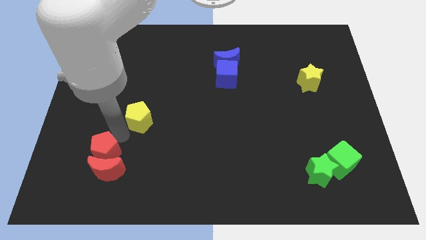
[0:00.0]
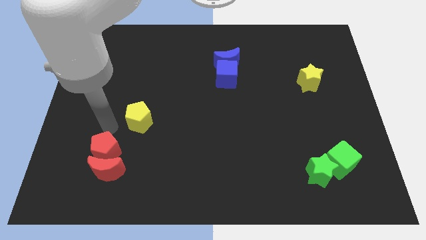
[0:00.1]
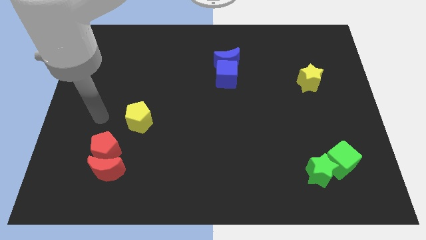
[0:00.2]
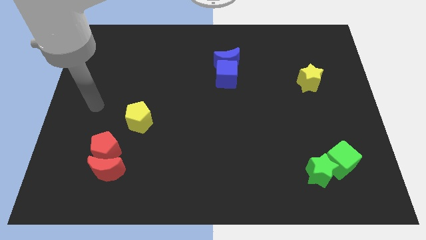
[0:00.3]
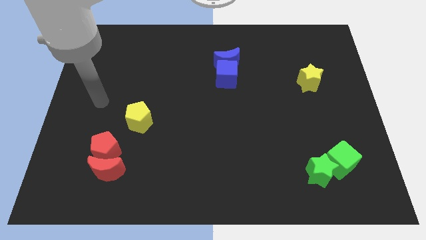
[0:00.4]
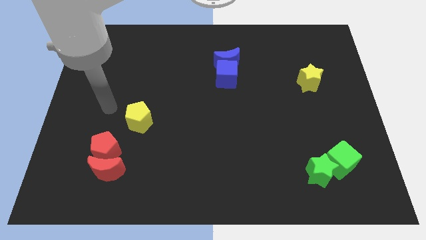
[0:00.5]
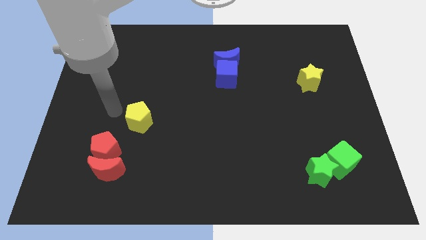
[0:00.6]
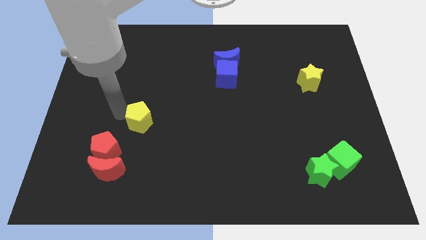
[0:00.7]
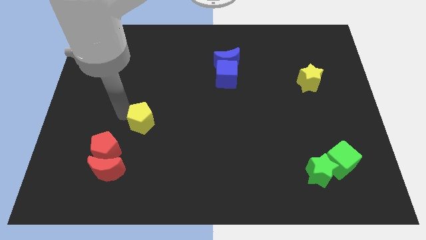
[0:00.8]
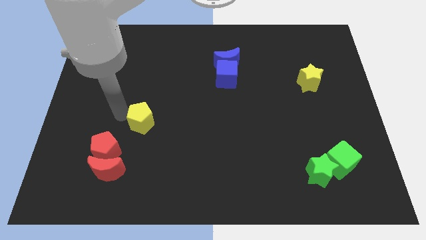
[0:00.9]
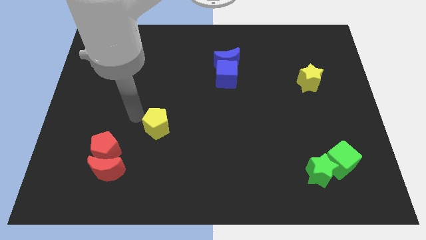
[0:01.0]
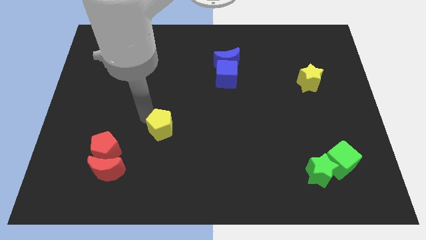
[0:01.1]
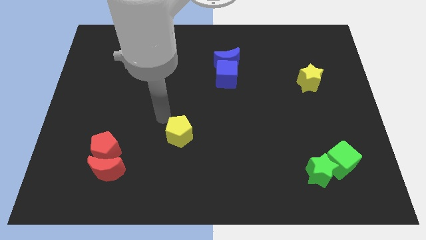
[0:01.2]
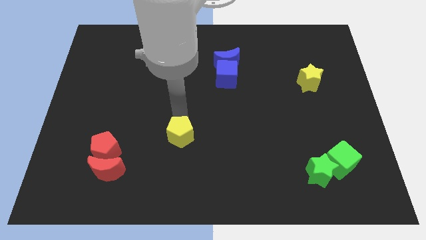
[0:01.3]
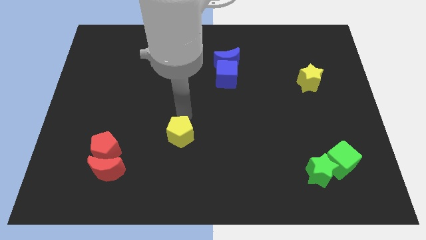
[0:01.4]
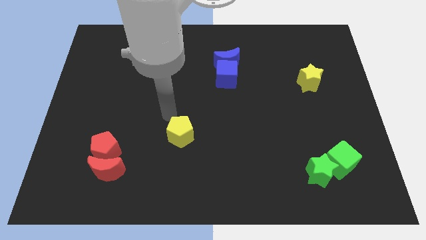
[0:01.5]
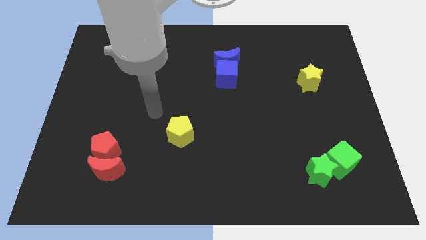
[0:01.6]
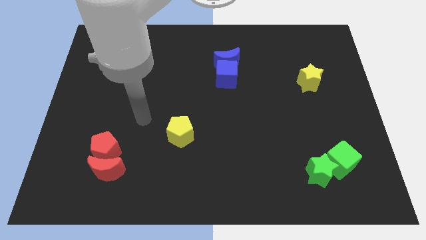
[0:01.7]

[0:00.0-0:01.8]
move yellow pentagon towards bottom

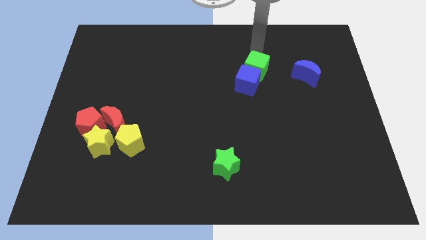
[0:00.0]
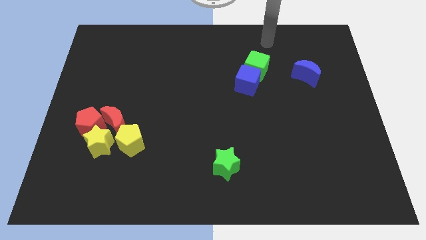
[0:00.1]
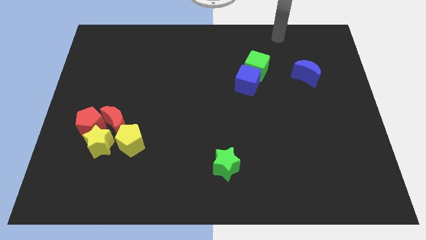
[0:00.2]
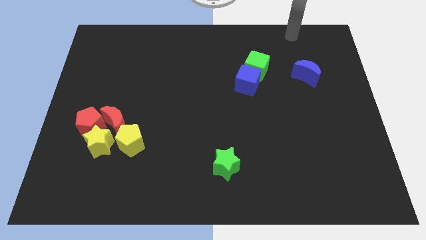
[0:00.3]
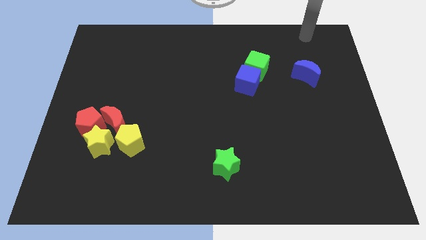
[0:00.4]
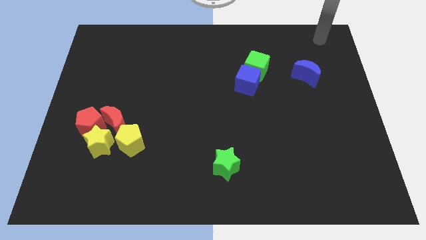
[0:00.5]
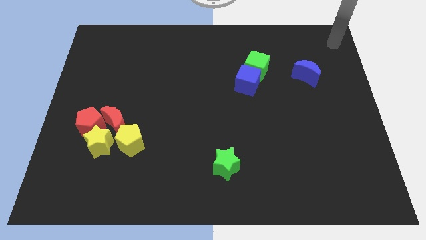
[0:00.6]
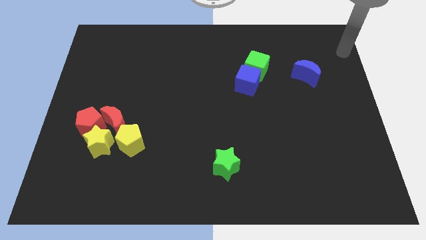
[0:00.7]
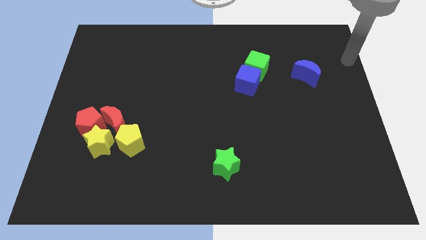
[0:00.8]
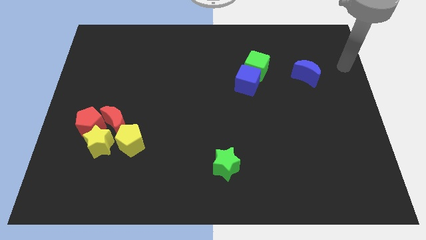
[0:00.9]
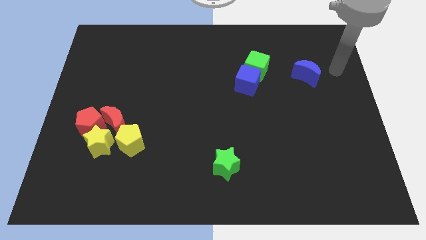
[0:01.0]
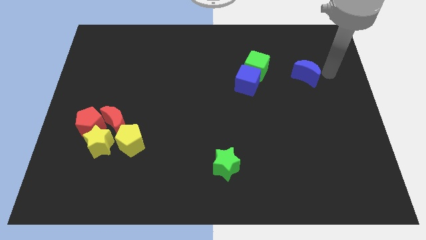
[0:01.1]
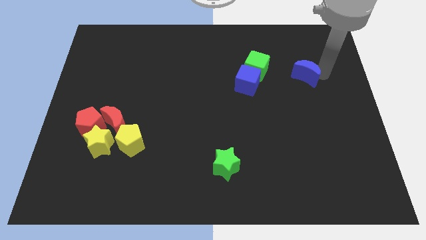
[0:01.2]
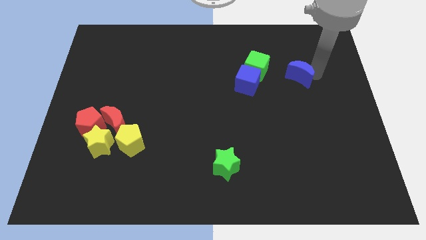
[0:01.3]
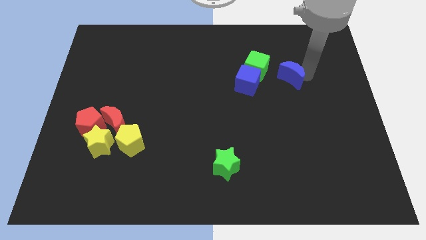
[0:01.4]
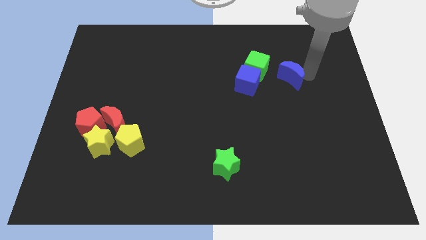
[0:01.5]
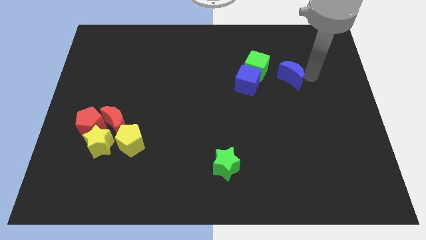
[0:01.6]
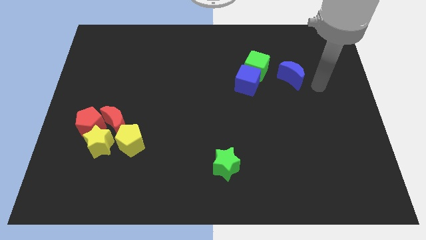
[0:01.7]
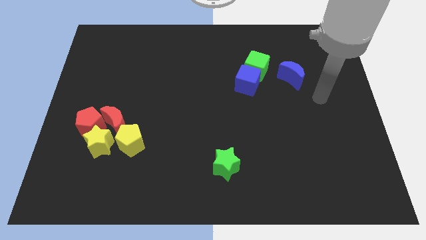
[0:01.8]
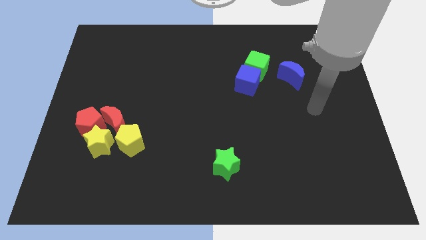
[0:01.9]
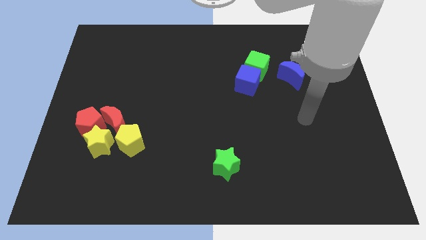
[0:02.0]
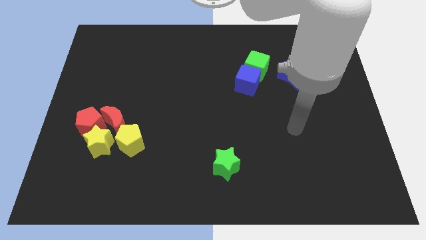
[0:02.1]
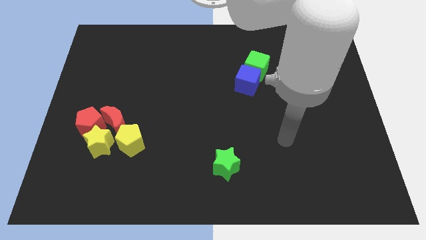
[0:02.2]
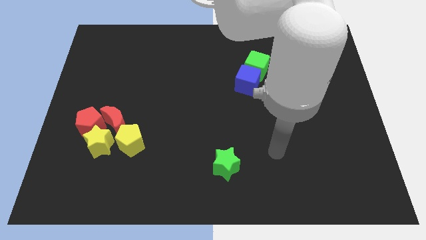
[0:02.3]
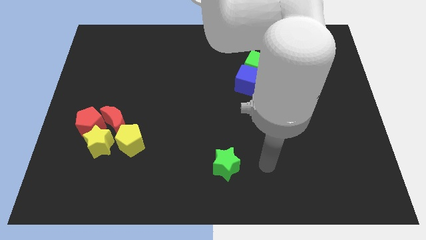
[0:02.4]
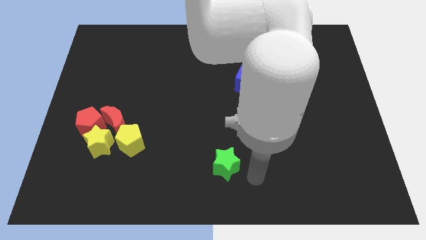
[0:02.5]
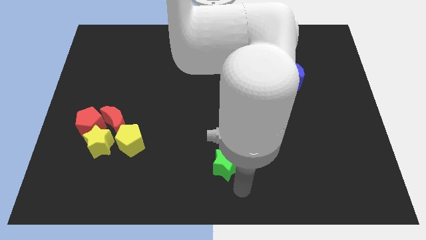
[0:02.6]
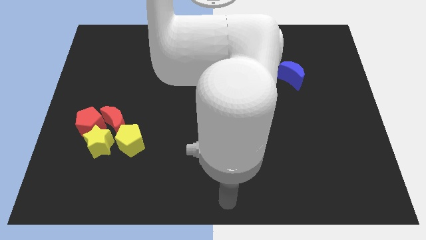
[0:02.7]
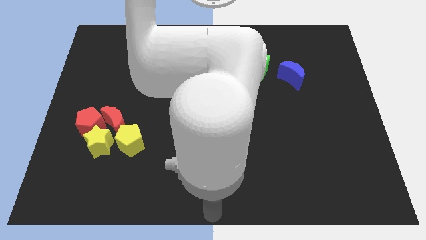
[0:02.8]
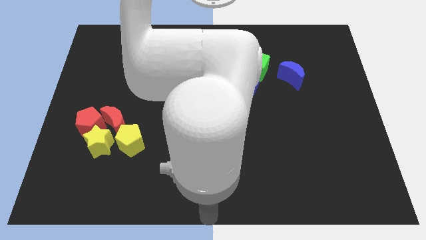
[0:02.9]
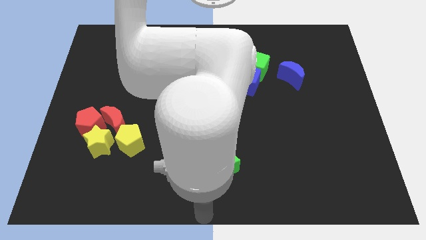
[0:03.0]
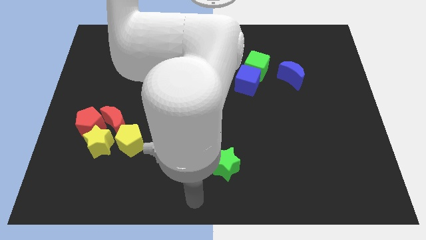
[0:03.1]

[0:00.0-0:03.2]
move your arm to the bottom center of the board

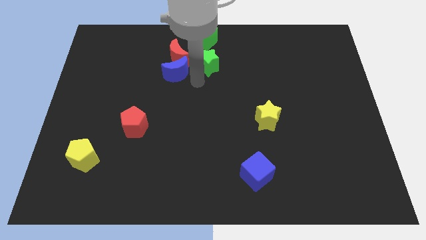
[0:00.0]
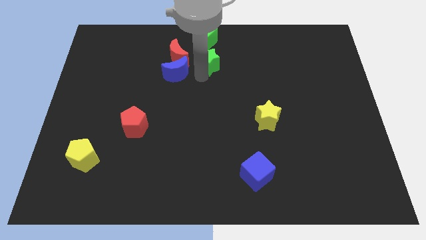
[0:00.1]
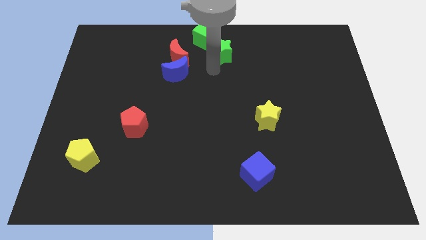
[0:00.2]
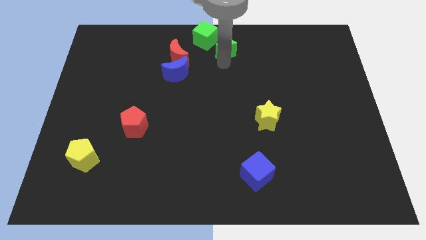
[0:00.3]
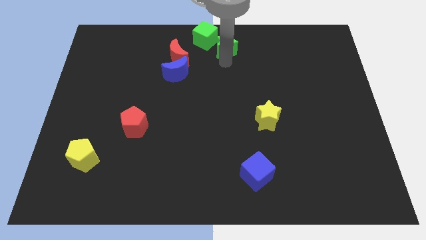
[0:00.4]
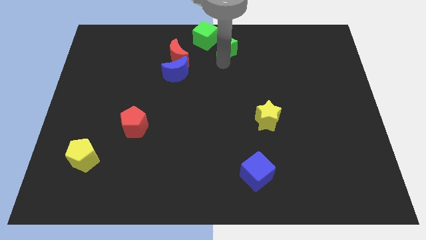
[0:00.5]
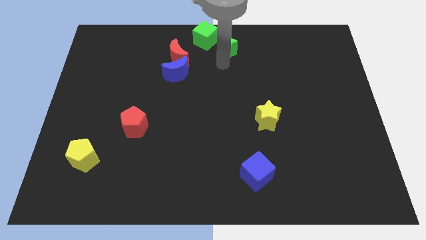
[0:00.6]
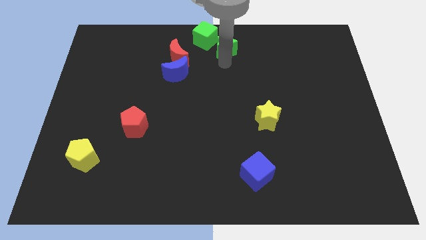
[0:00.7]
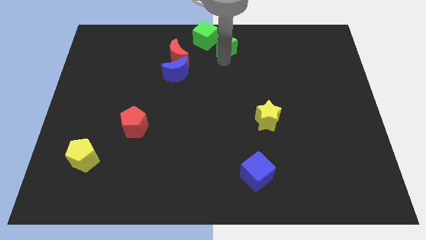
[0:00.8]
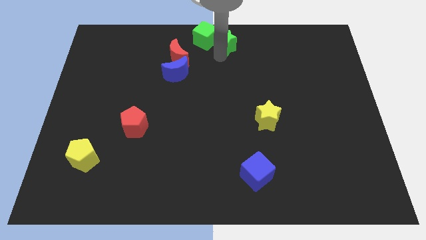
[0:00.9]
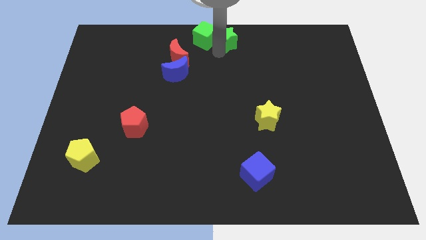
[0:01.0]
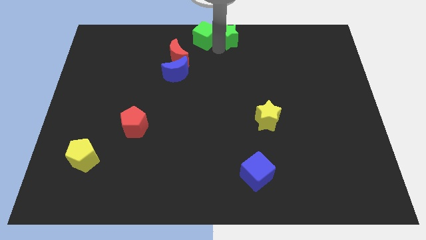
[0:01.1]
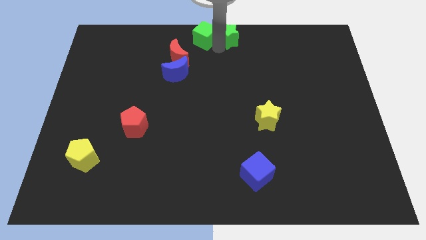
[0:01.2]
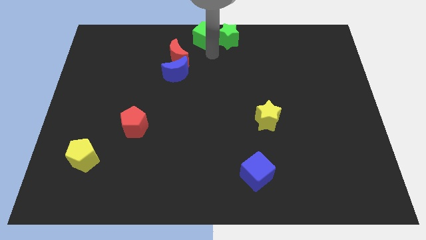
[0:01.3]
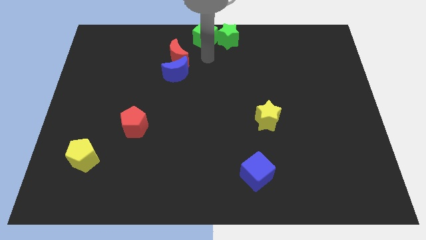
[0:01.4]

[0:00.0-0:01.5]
take the green star close to the green cube

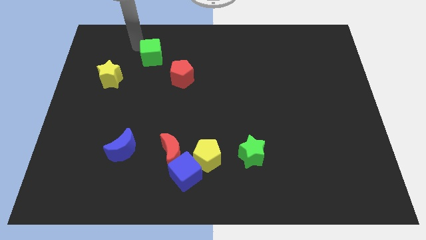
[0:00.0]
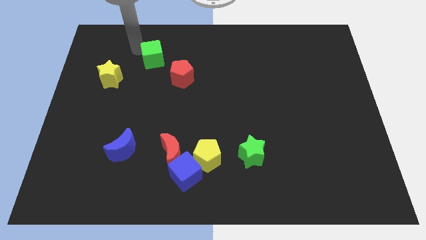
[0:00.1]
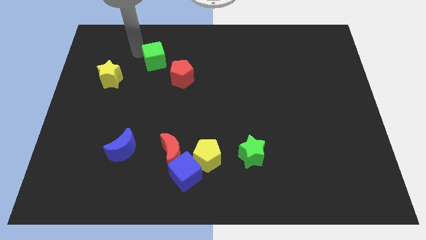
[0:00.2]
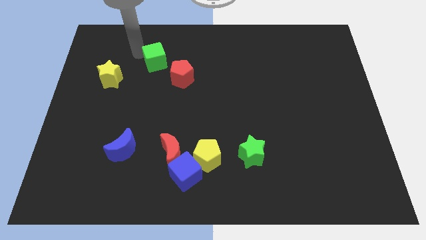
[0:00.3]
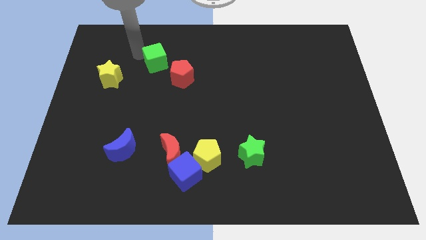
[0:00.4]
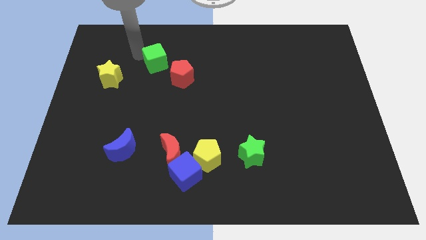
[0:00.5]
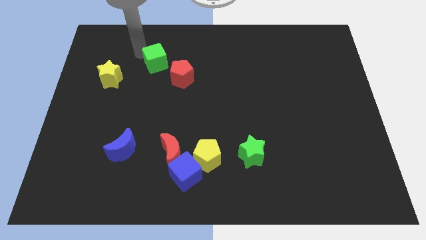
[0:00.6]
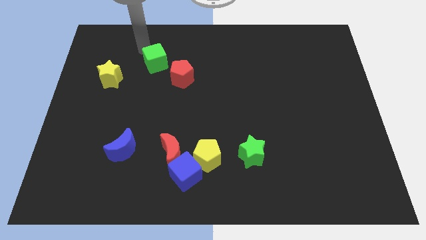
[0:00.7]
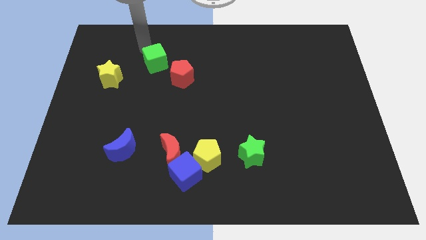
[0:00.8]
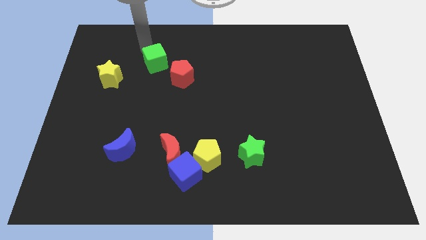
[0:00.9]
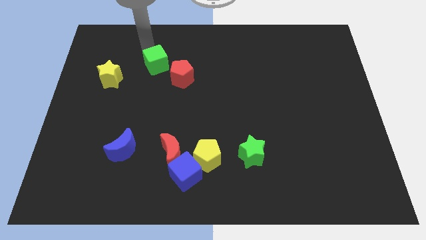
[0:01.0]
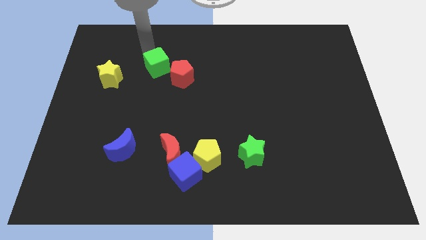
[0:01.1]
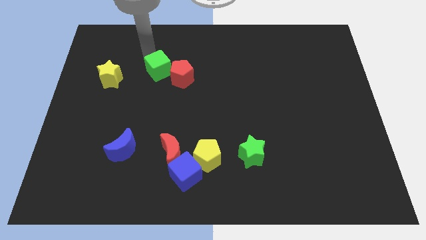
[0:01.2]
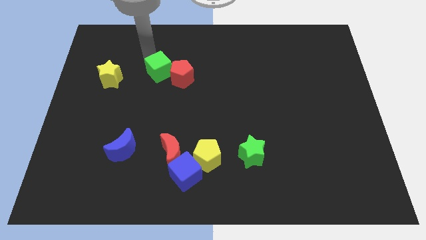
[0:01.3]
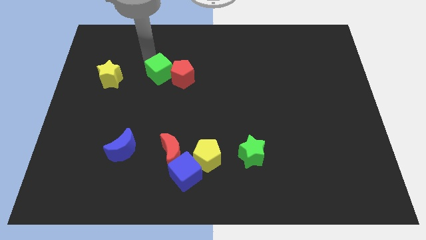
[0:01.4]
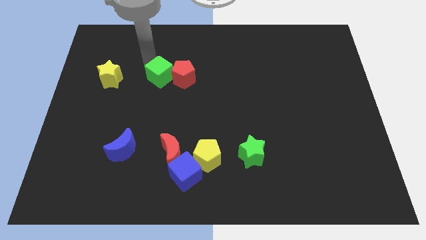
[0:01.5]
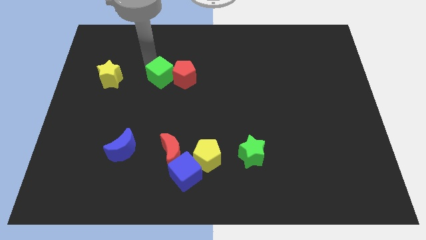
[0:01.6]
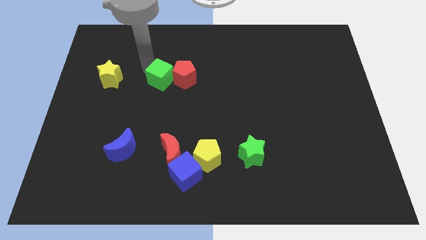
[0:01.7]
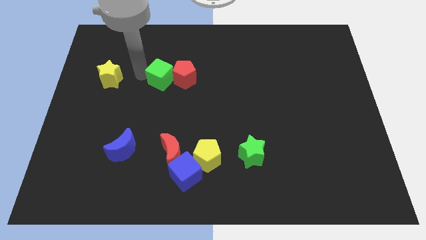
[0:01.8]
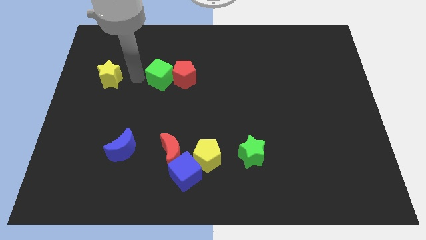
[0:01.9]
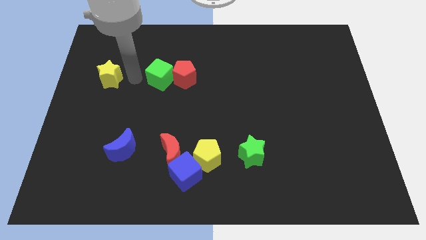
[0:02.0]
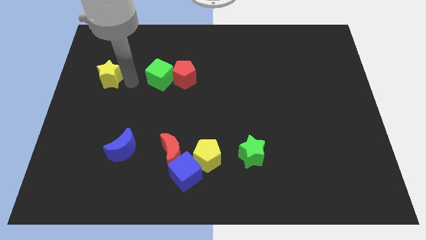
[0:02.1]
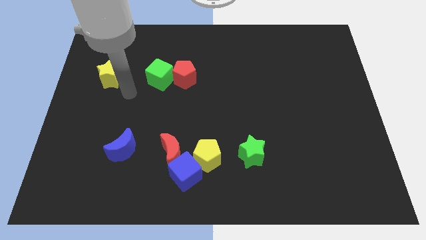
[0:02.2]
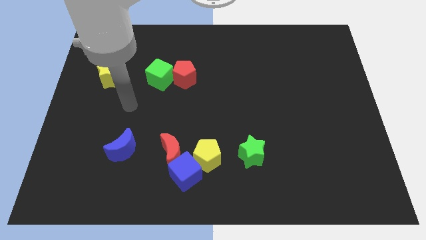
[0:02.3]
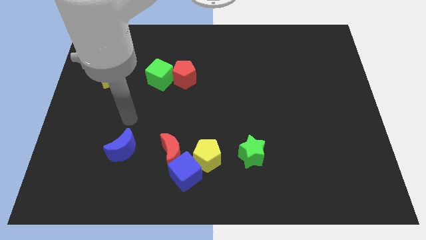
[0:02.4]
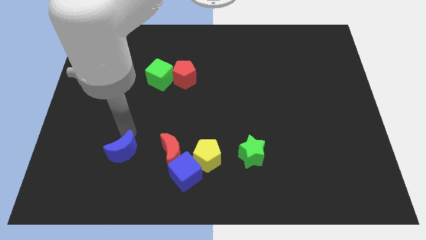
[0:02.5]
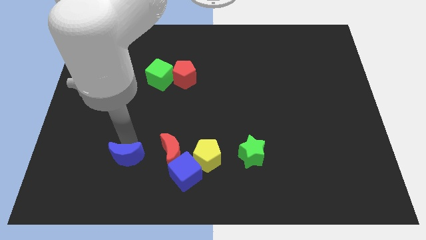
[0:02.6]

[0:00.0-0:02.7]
place your arm near the blue moon
